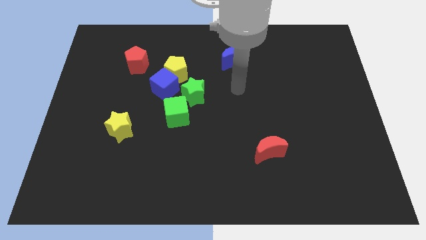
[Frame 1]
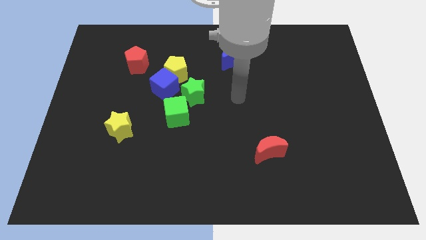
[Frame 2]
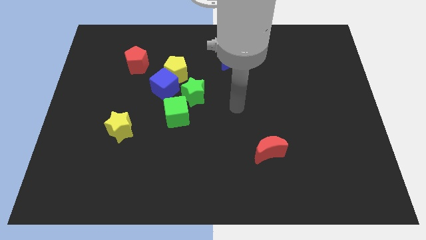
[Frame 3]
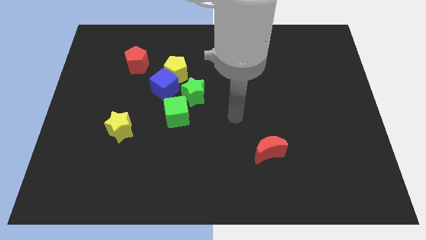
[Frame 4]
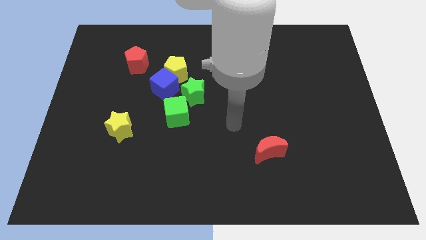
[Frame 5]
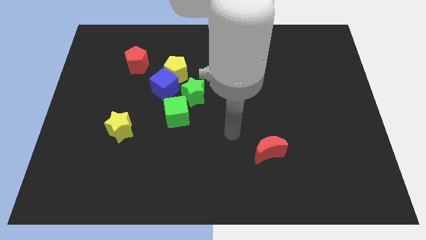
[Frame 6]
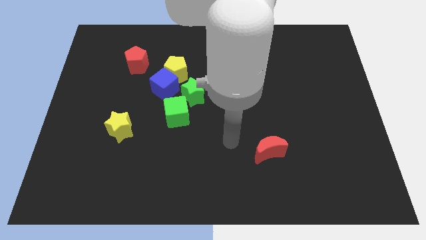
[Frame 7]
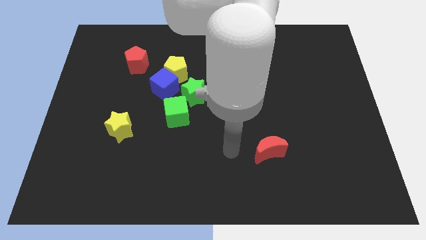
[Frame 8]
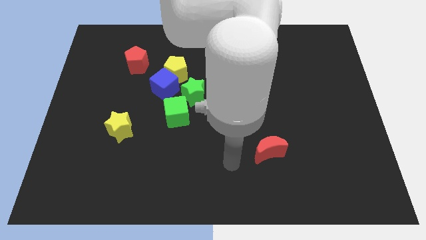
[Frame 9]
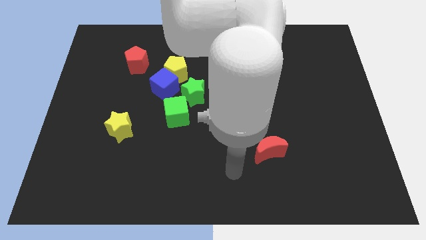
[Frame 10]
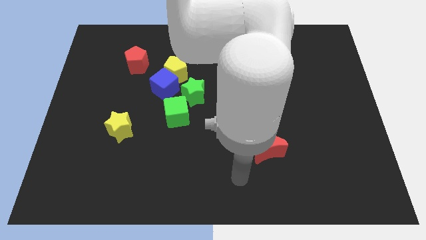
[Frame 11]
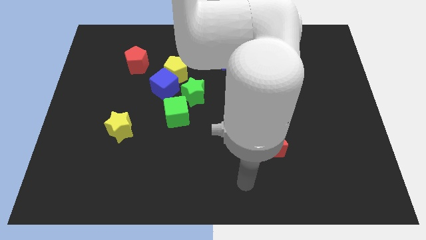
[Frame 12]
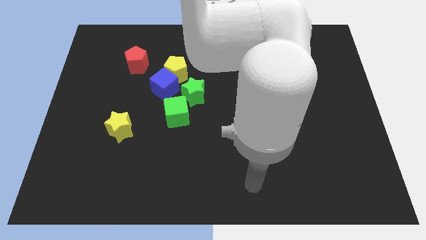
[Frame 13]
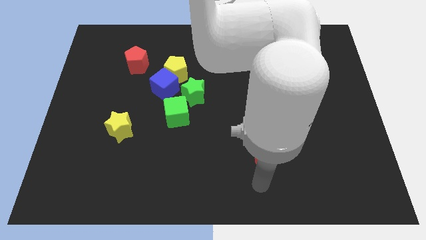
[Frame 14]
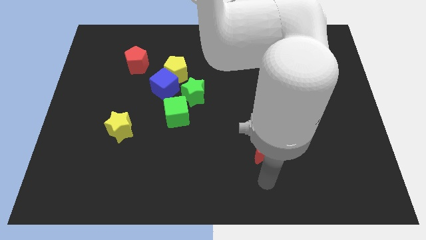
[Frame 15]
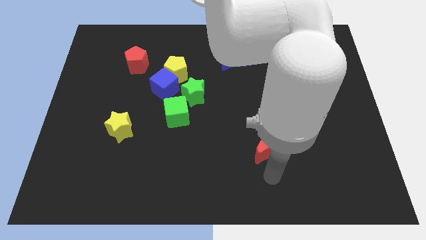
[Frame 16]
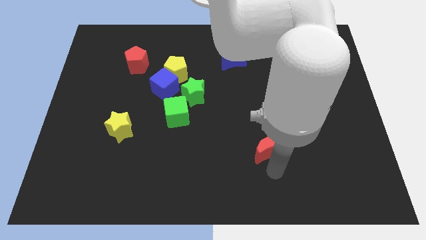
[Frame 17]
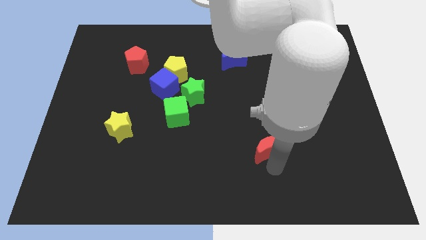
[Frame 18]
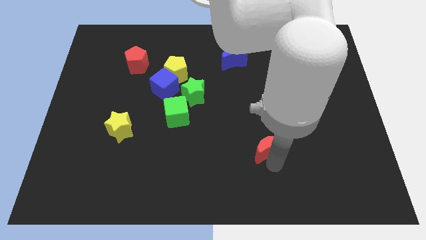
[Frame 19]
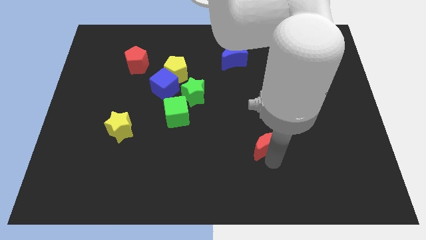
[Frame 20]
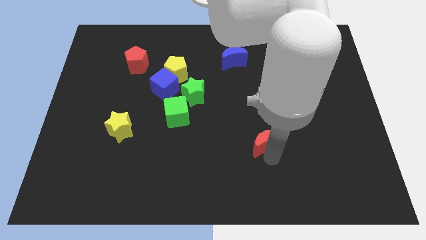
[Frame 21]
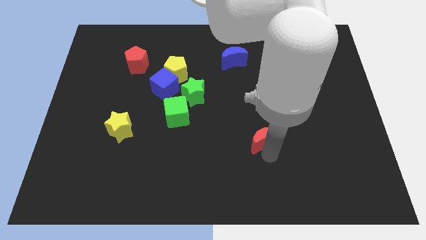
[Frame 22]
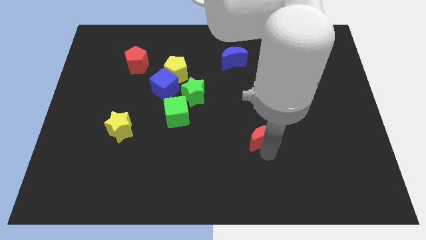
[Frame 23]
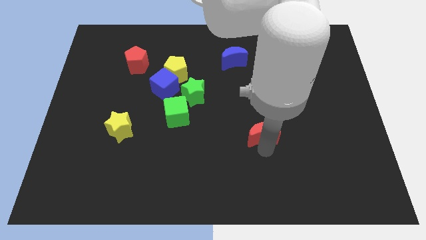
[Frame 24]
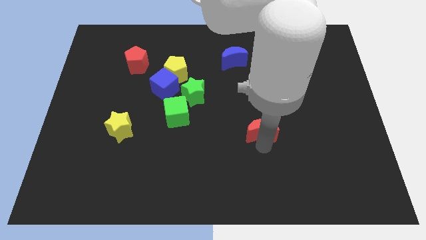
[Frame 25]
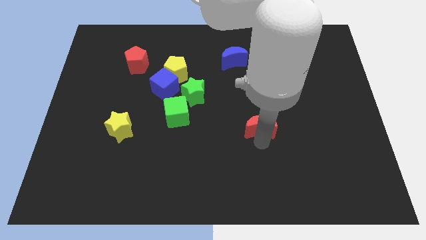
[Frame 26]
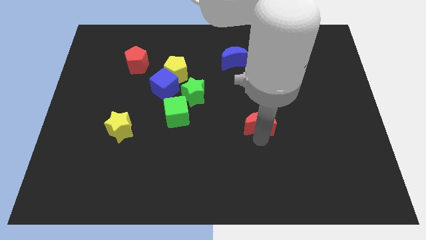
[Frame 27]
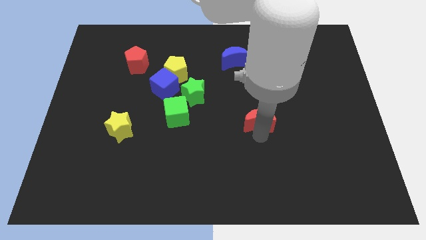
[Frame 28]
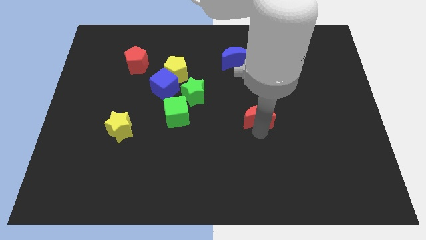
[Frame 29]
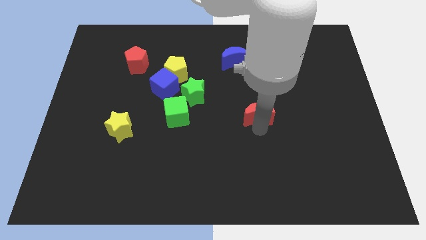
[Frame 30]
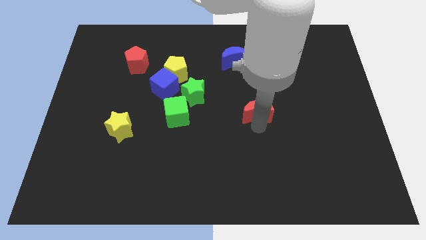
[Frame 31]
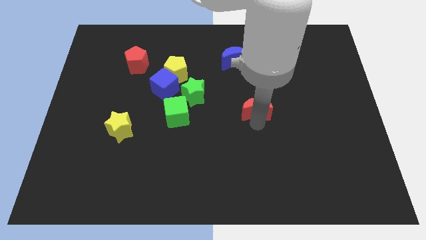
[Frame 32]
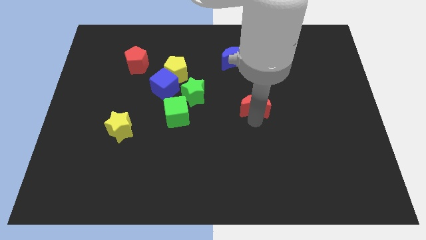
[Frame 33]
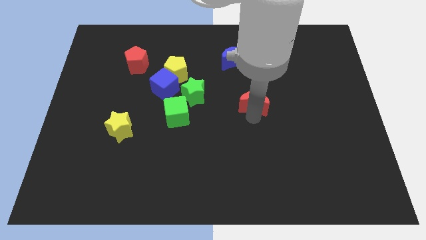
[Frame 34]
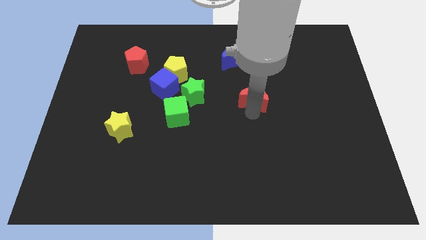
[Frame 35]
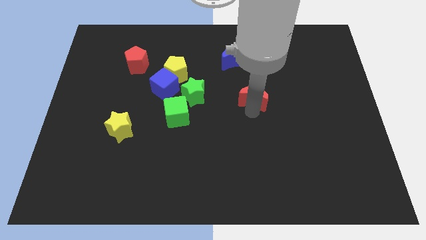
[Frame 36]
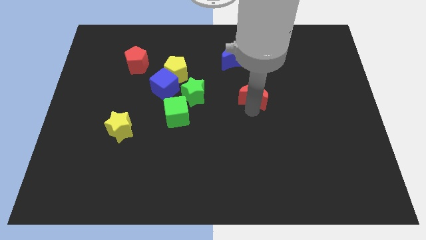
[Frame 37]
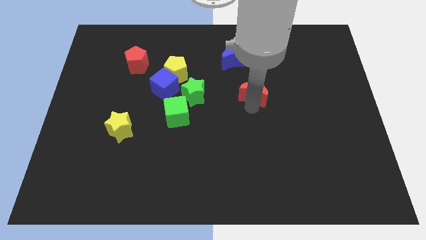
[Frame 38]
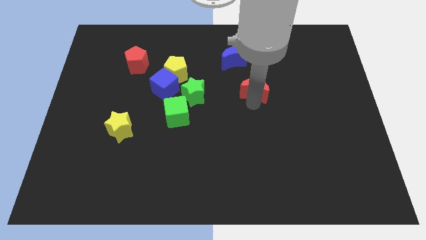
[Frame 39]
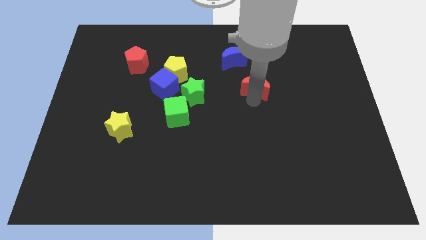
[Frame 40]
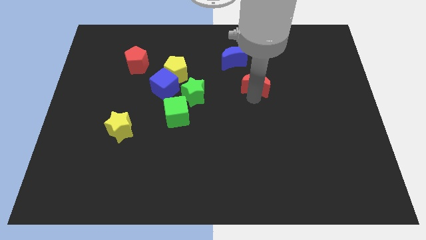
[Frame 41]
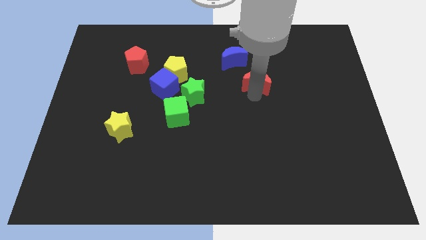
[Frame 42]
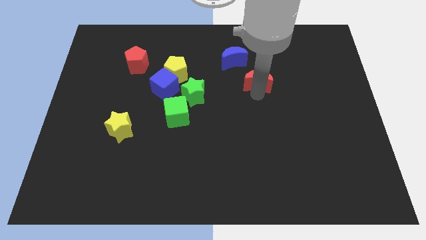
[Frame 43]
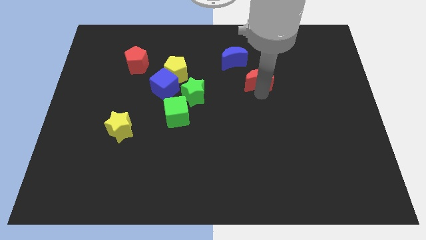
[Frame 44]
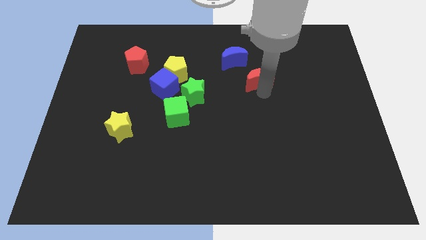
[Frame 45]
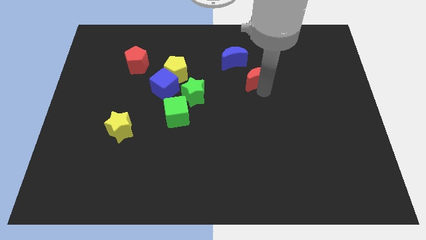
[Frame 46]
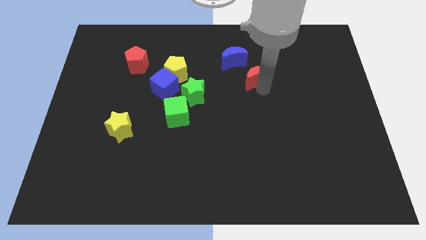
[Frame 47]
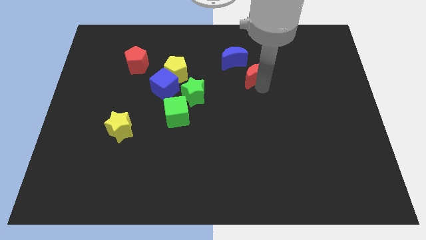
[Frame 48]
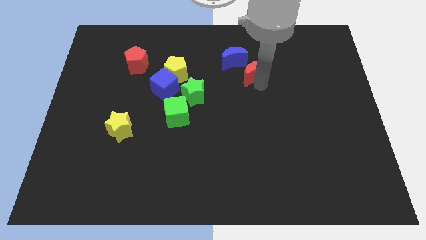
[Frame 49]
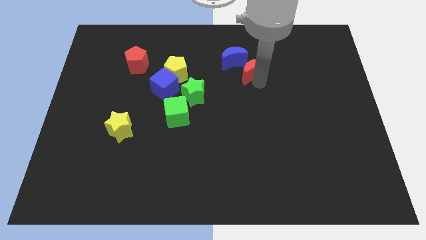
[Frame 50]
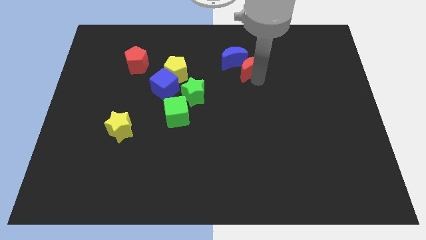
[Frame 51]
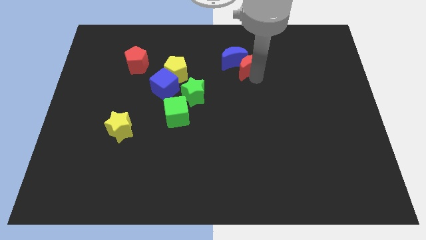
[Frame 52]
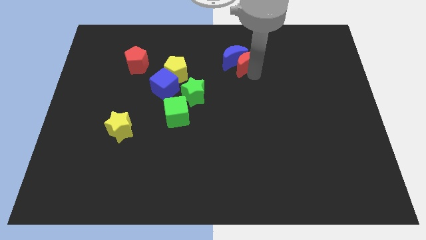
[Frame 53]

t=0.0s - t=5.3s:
push the red moon next to the blue moon

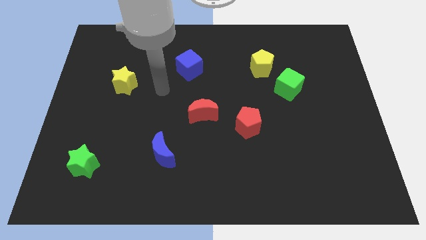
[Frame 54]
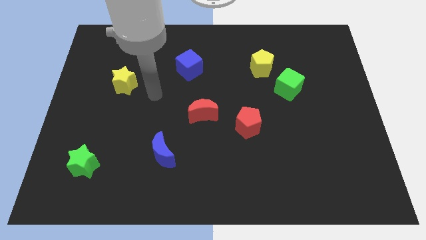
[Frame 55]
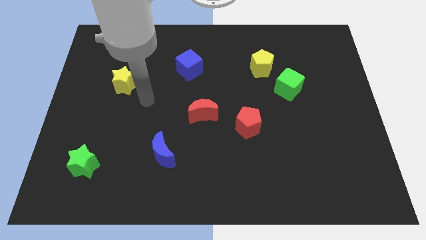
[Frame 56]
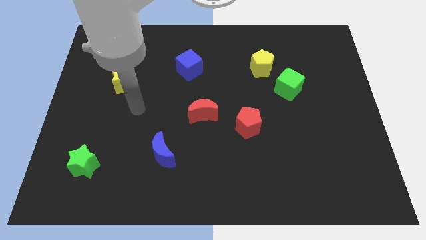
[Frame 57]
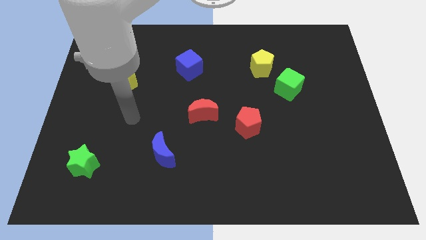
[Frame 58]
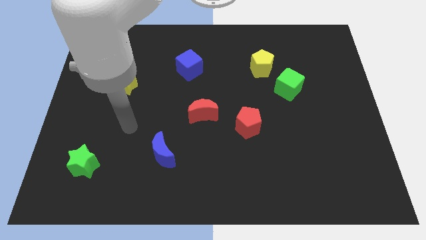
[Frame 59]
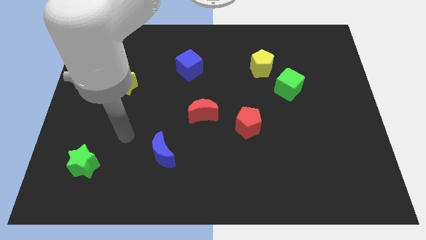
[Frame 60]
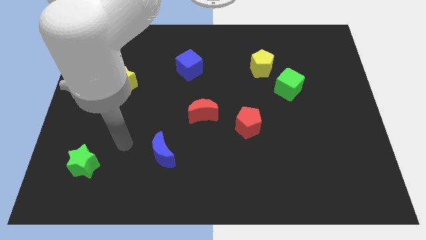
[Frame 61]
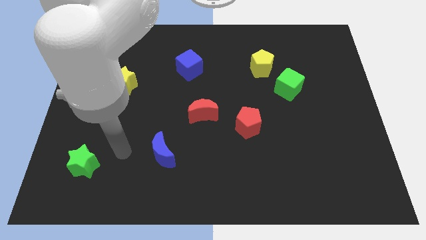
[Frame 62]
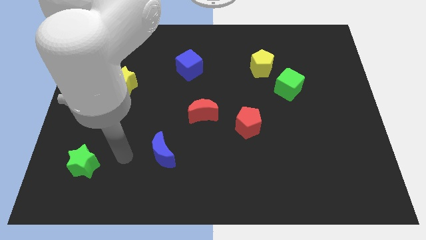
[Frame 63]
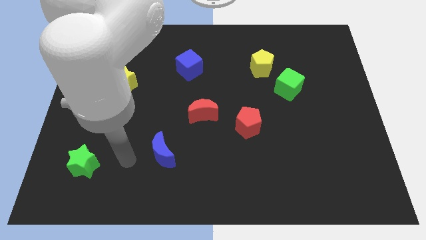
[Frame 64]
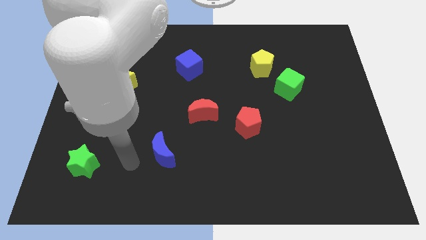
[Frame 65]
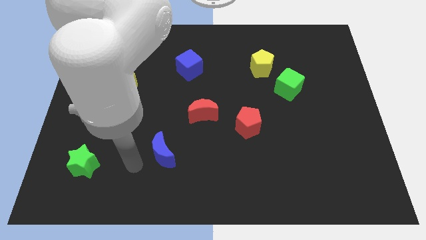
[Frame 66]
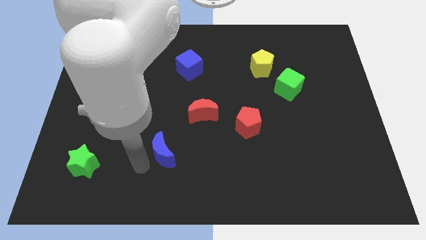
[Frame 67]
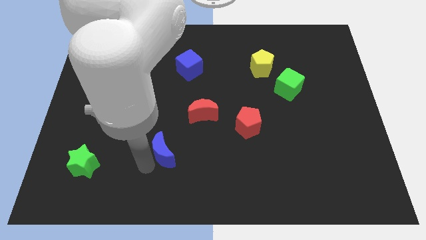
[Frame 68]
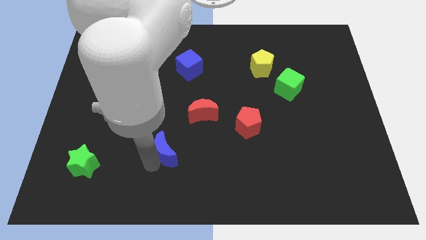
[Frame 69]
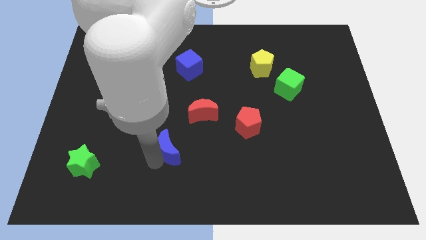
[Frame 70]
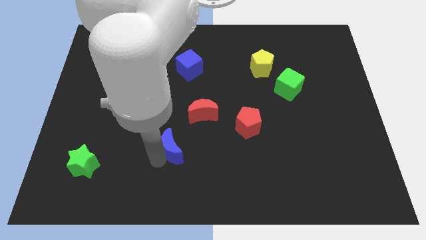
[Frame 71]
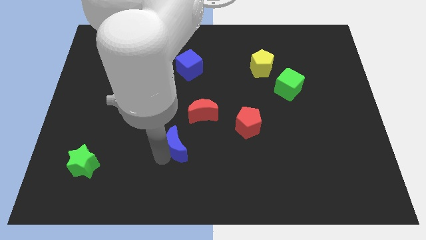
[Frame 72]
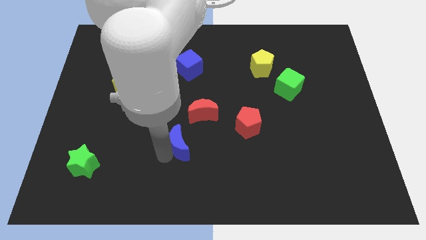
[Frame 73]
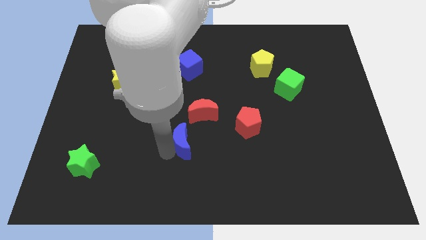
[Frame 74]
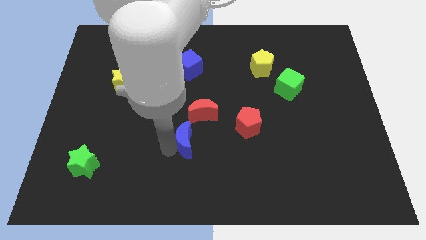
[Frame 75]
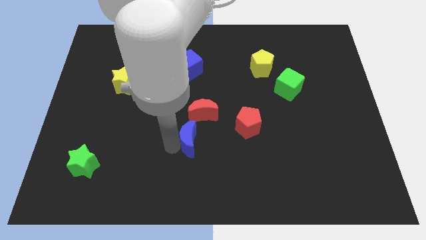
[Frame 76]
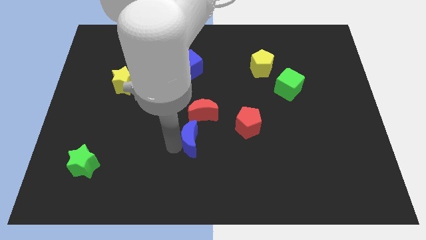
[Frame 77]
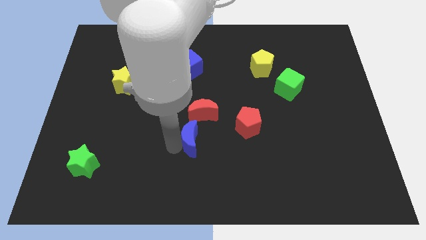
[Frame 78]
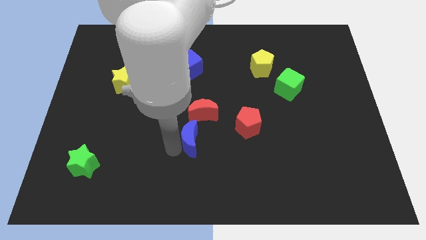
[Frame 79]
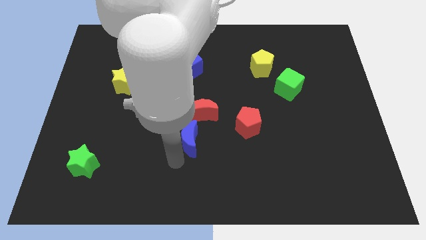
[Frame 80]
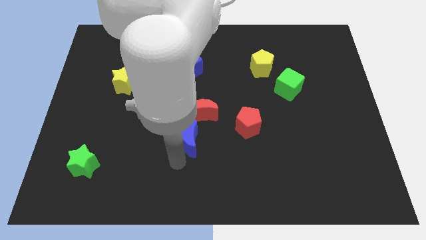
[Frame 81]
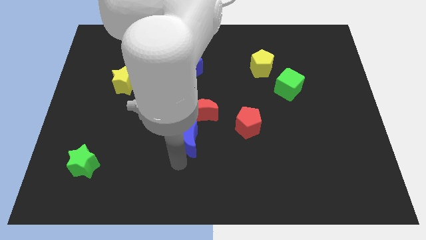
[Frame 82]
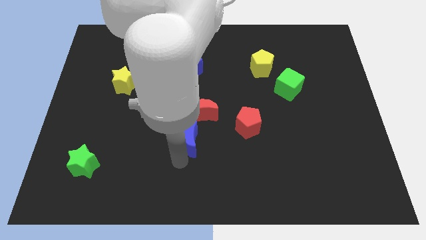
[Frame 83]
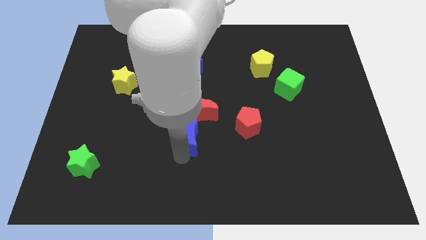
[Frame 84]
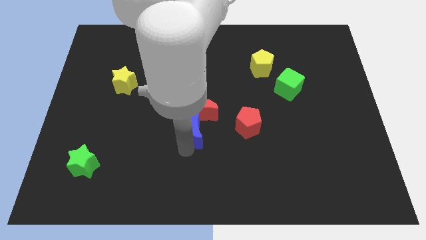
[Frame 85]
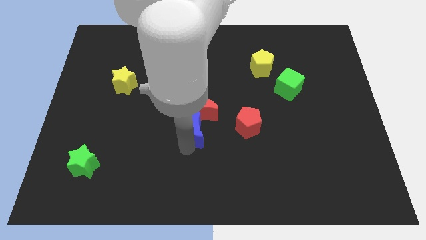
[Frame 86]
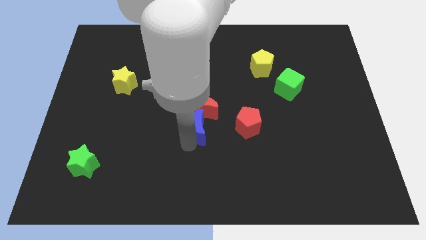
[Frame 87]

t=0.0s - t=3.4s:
push the blue moon to the red moon

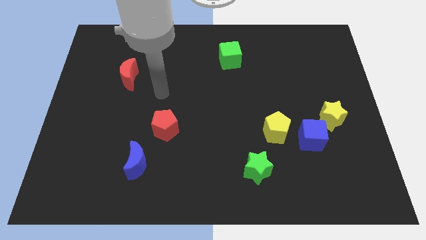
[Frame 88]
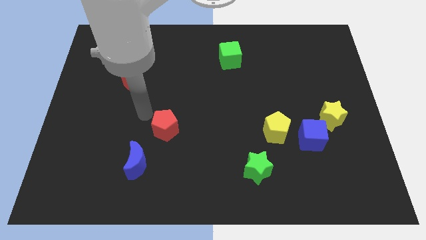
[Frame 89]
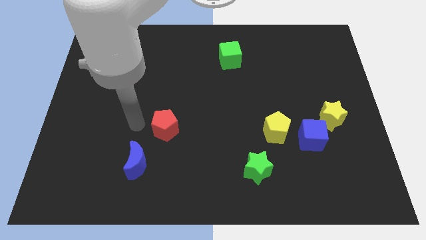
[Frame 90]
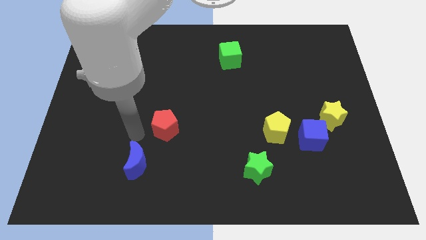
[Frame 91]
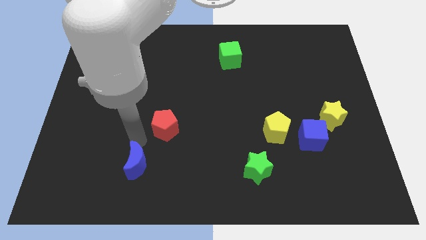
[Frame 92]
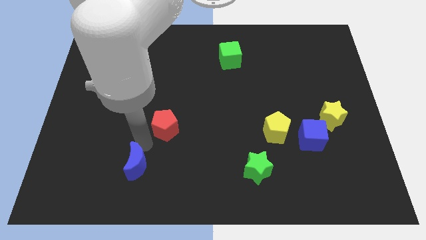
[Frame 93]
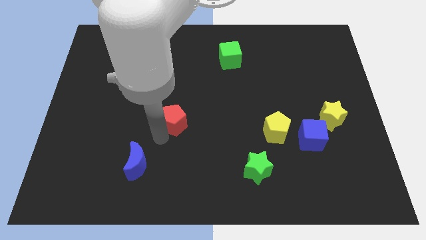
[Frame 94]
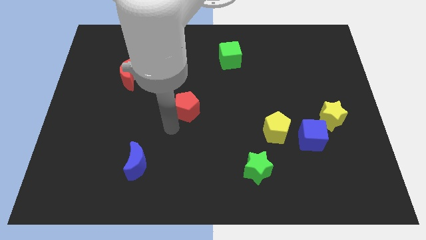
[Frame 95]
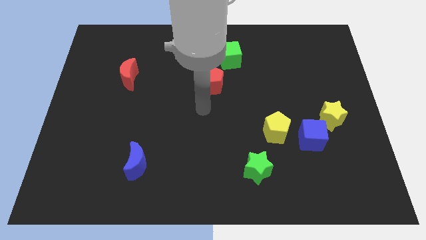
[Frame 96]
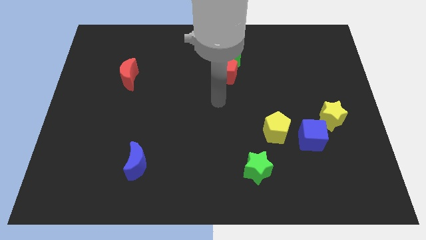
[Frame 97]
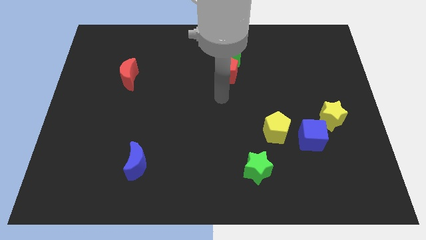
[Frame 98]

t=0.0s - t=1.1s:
slide the red pentagon towards the green cube
